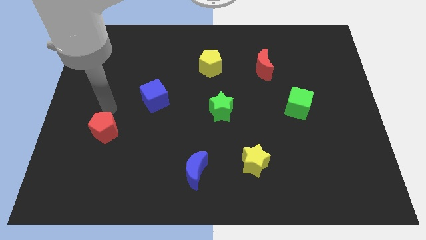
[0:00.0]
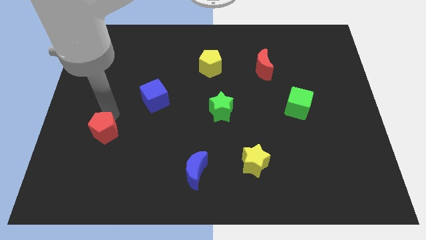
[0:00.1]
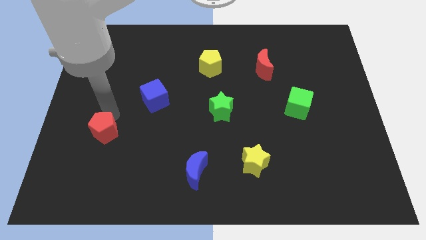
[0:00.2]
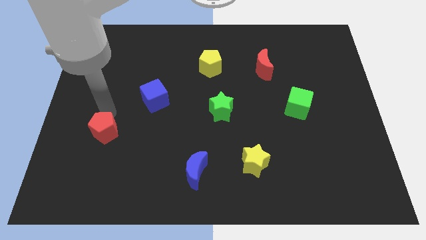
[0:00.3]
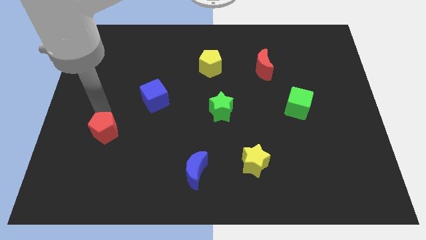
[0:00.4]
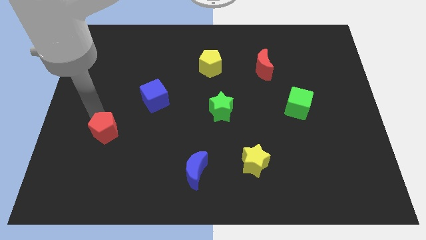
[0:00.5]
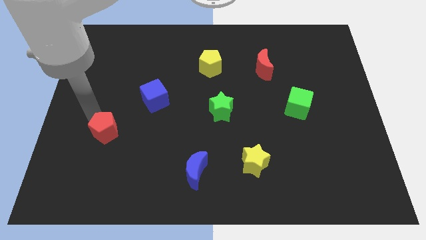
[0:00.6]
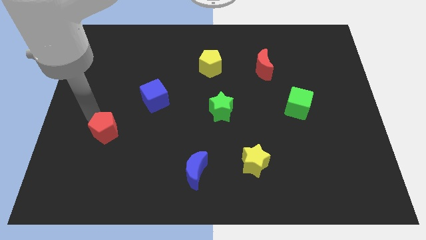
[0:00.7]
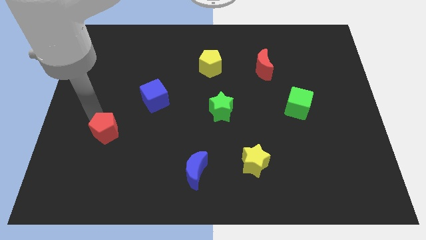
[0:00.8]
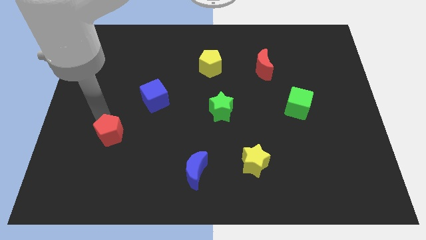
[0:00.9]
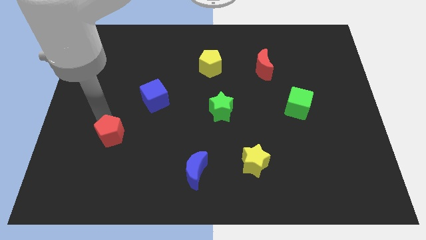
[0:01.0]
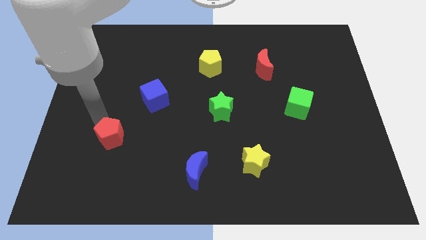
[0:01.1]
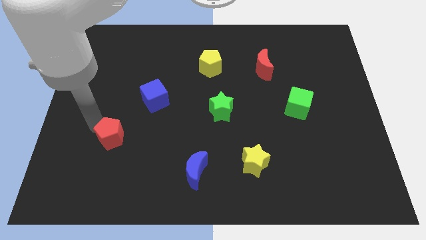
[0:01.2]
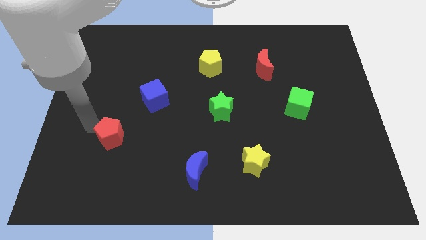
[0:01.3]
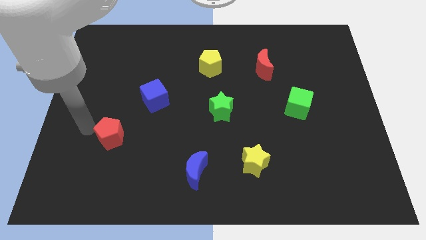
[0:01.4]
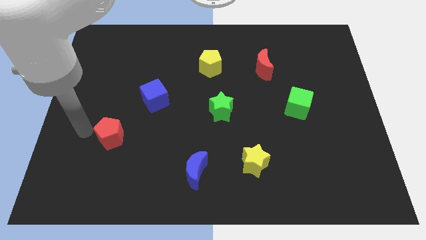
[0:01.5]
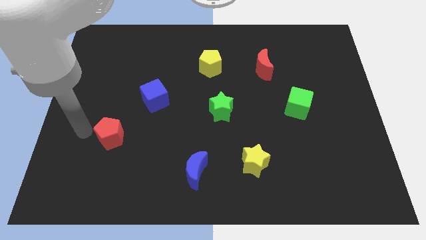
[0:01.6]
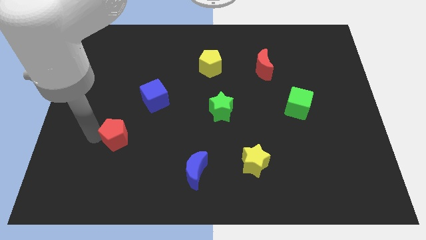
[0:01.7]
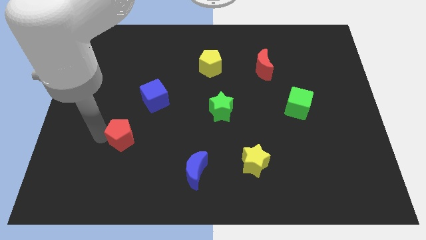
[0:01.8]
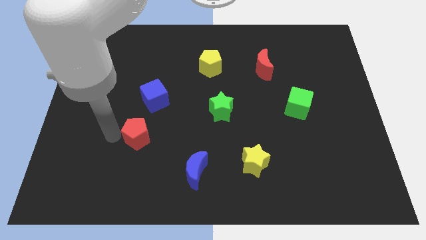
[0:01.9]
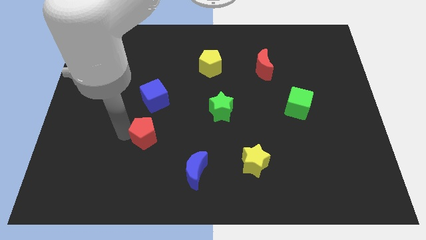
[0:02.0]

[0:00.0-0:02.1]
place red pentagon below the blue cube

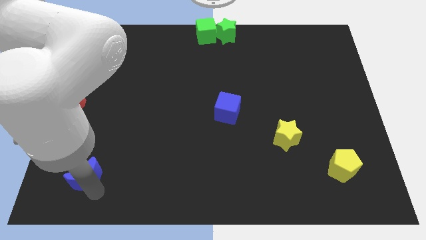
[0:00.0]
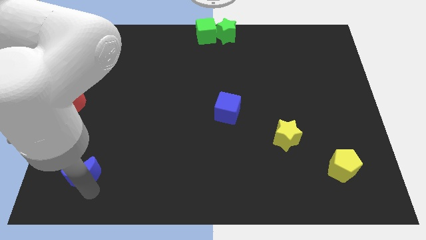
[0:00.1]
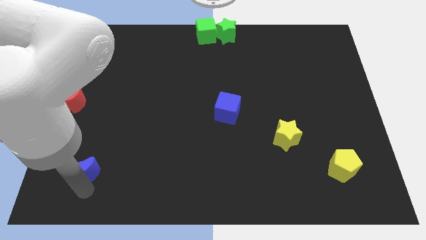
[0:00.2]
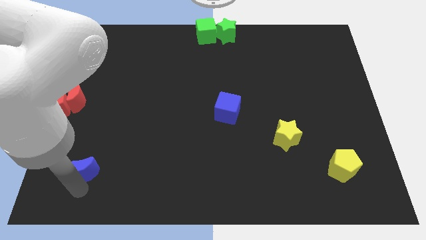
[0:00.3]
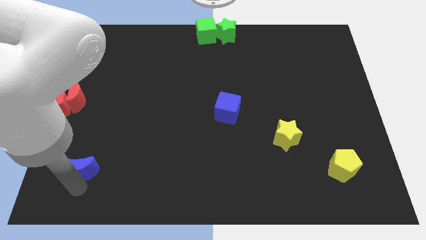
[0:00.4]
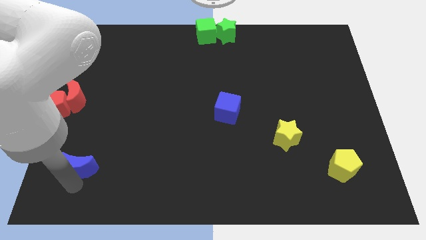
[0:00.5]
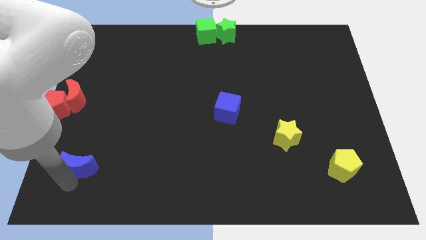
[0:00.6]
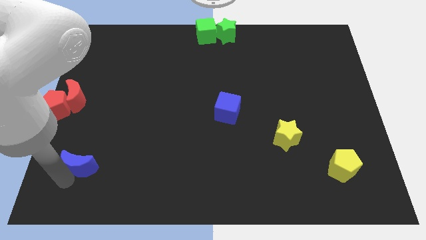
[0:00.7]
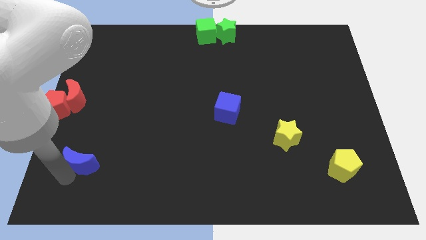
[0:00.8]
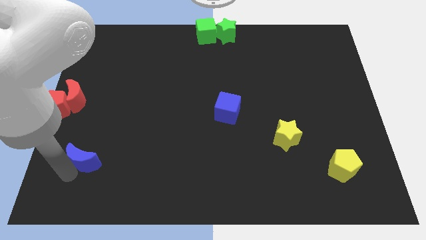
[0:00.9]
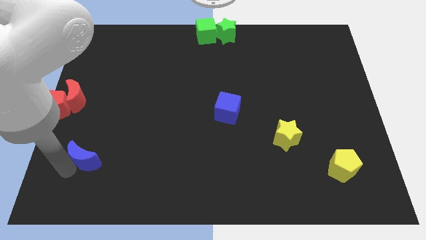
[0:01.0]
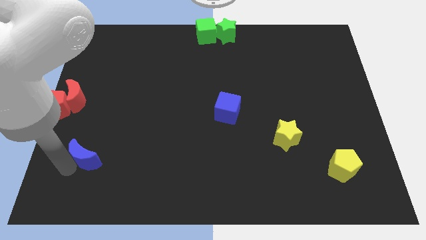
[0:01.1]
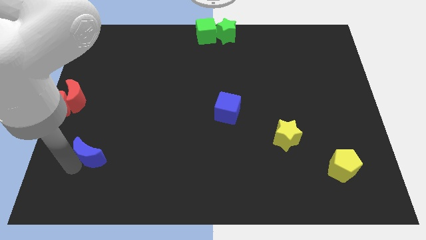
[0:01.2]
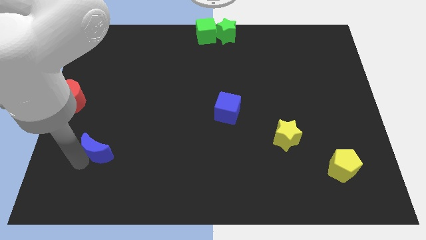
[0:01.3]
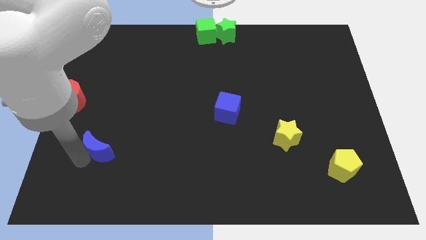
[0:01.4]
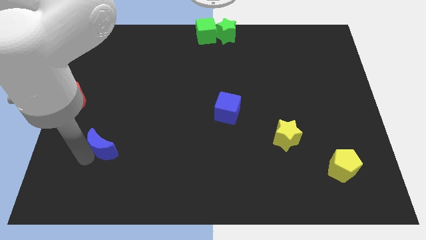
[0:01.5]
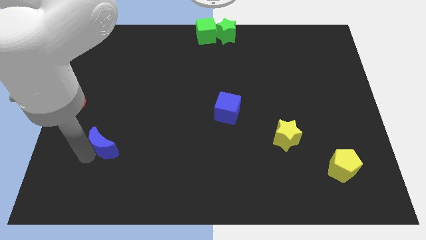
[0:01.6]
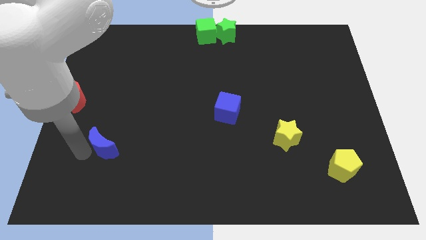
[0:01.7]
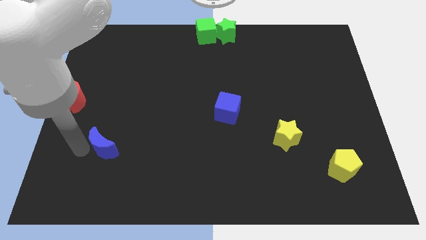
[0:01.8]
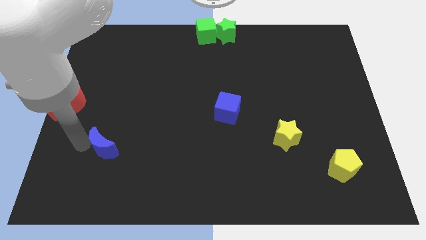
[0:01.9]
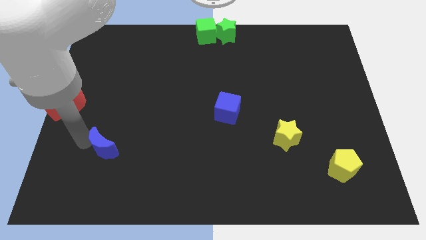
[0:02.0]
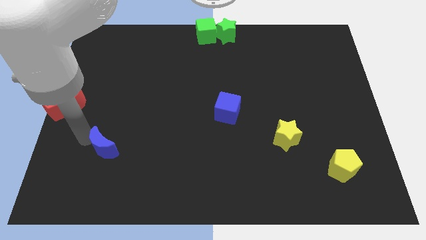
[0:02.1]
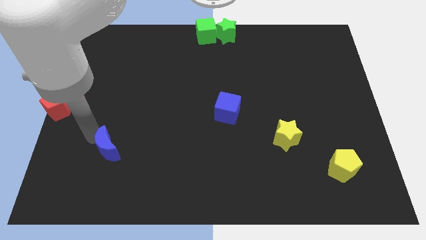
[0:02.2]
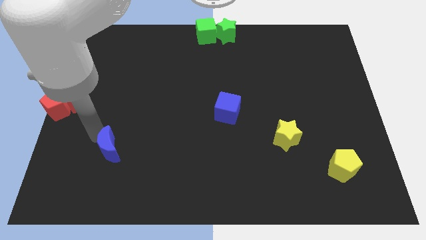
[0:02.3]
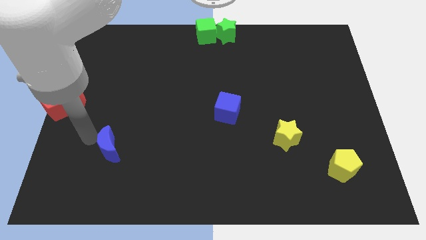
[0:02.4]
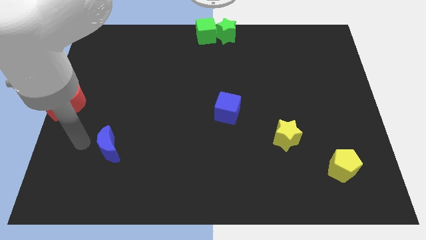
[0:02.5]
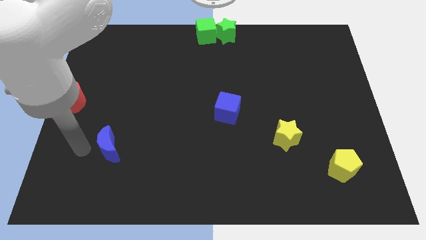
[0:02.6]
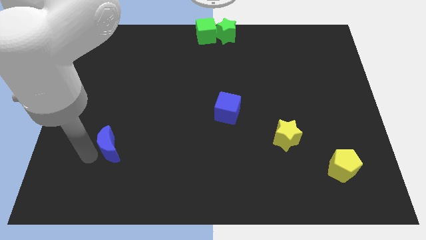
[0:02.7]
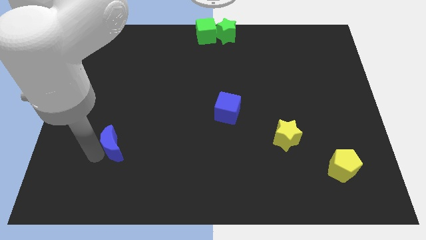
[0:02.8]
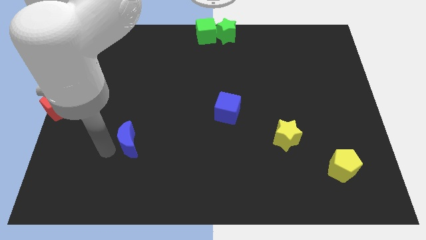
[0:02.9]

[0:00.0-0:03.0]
push the blue crescent slightly towards the center of the board

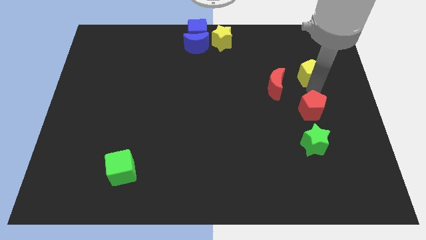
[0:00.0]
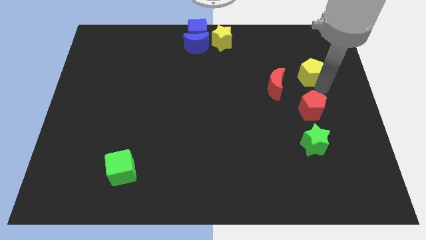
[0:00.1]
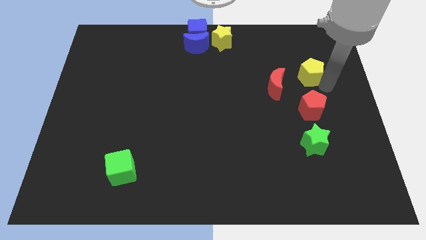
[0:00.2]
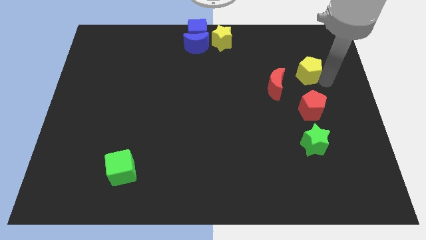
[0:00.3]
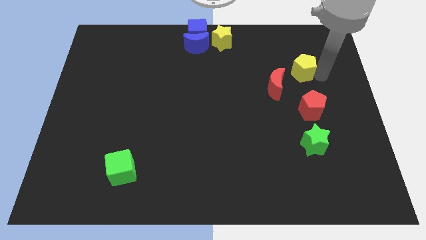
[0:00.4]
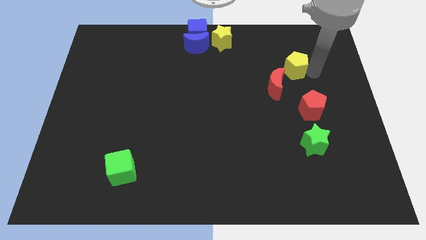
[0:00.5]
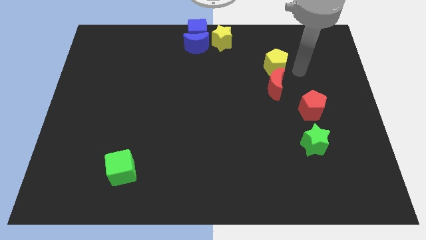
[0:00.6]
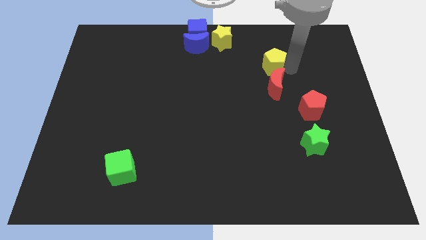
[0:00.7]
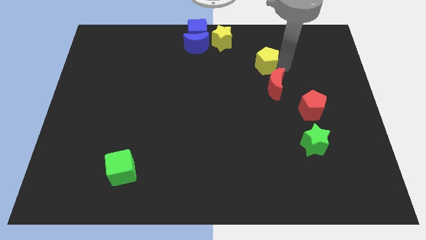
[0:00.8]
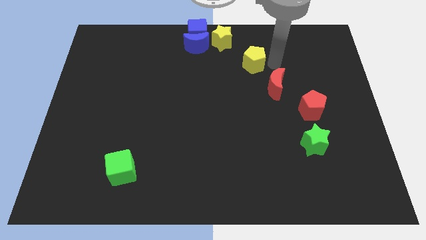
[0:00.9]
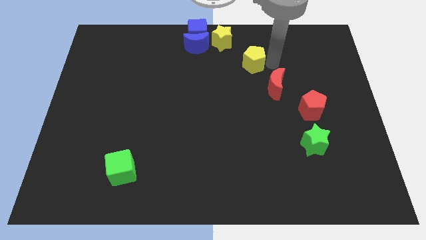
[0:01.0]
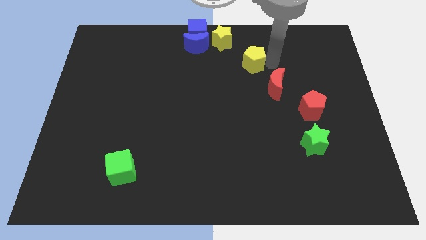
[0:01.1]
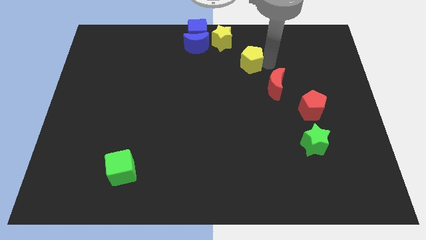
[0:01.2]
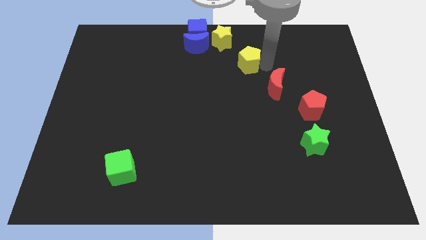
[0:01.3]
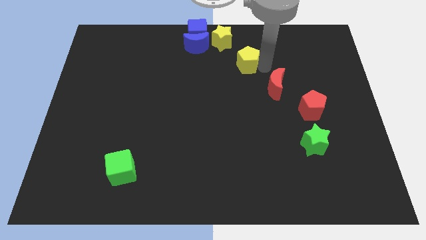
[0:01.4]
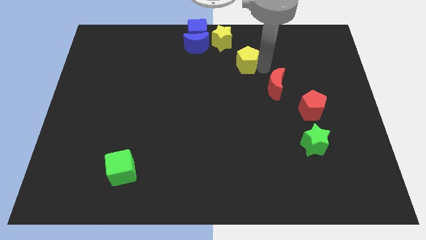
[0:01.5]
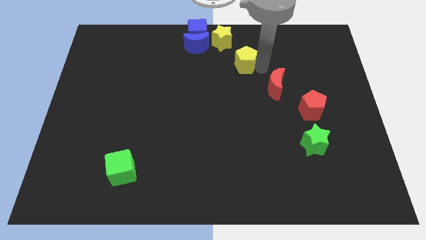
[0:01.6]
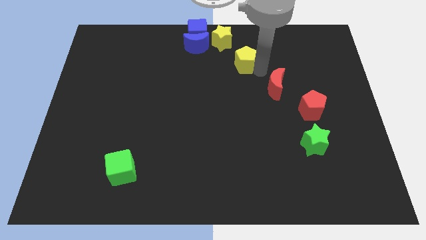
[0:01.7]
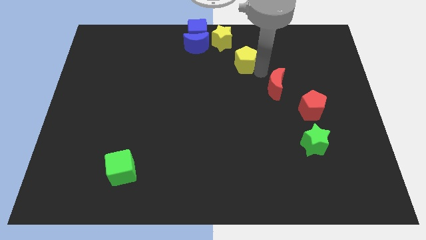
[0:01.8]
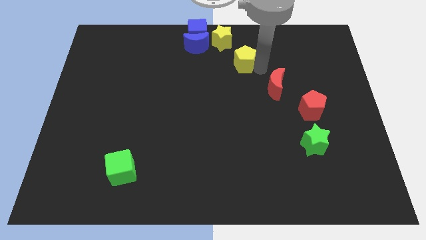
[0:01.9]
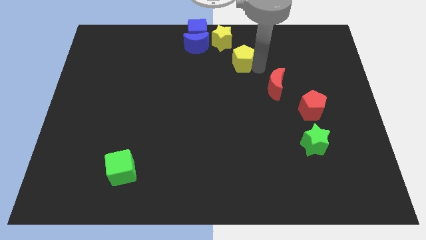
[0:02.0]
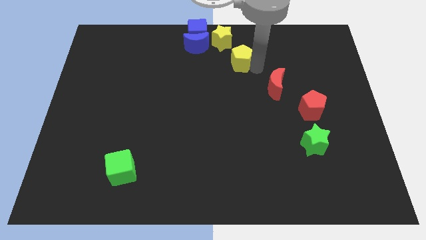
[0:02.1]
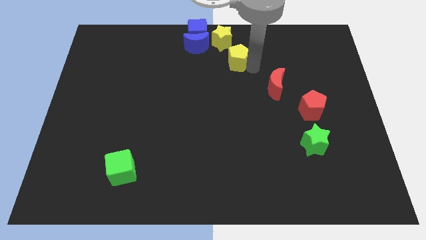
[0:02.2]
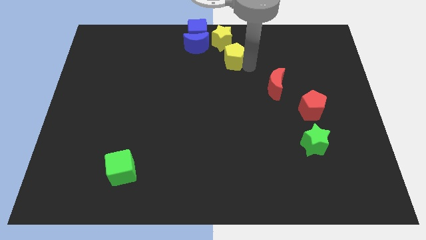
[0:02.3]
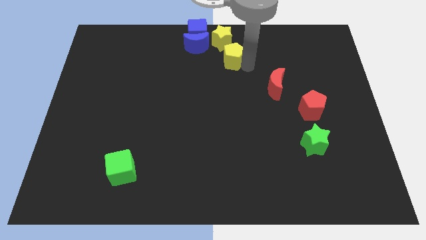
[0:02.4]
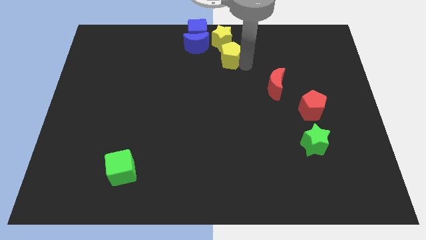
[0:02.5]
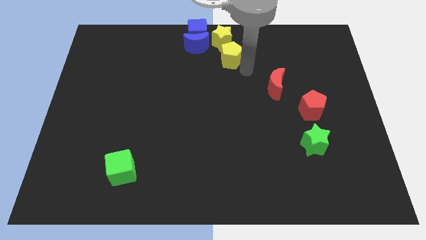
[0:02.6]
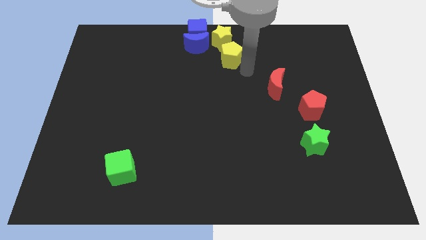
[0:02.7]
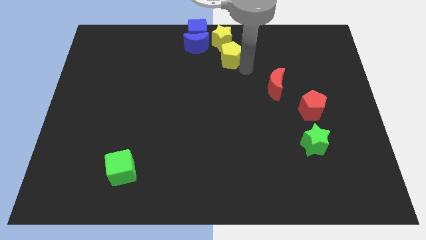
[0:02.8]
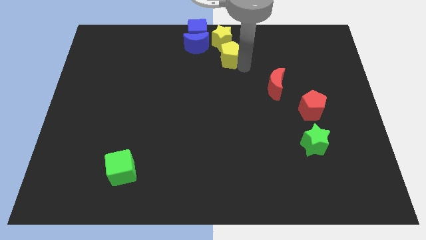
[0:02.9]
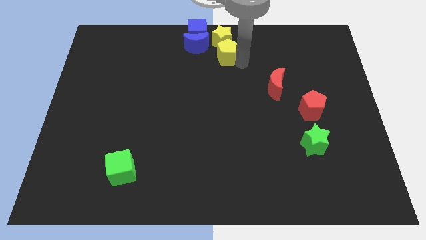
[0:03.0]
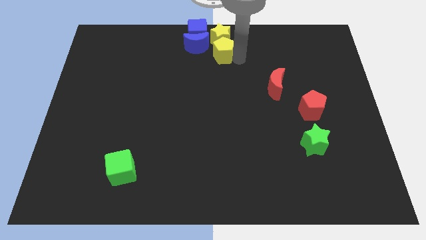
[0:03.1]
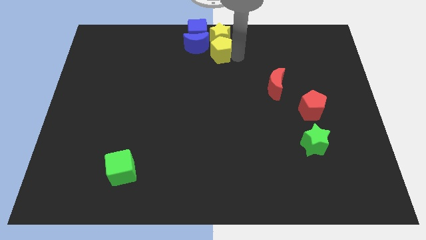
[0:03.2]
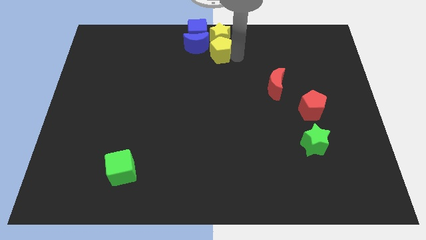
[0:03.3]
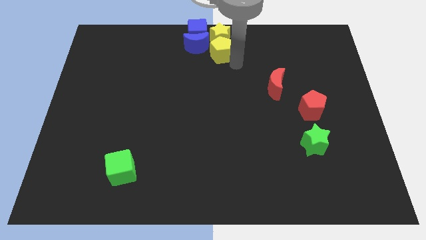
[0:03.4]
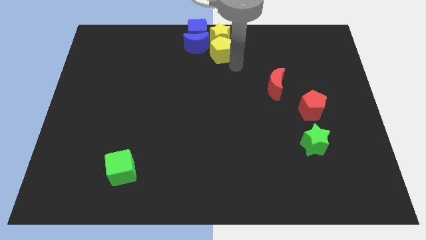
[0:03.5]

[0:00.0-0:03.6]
move the yellow pentagon into the bottom side of the yellow star

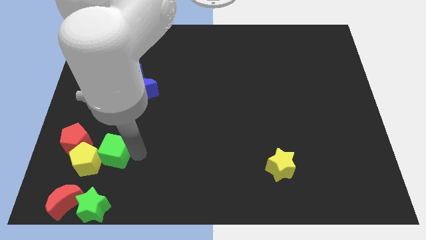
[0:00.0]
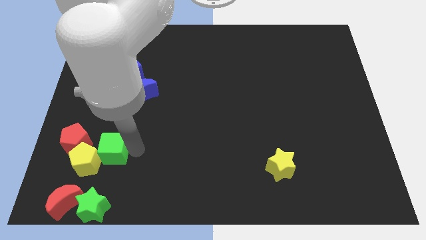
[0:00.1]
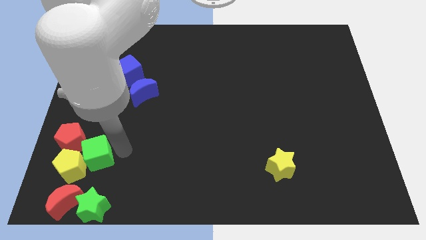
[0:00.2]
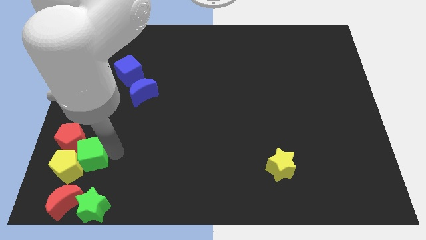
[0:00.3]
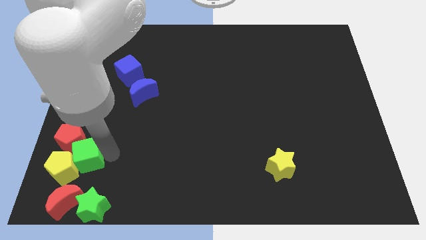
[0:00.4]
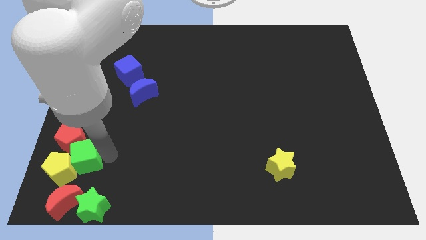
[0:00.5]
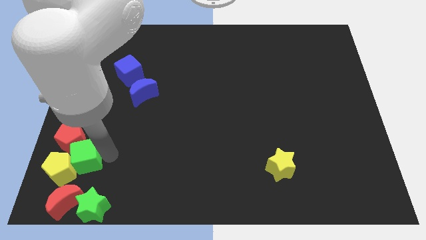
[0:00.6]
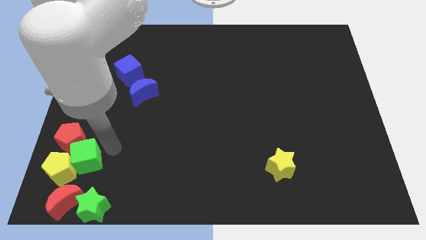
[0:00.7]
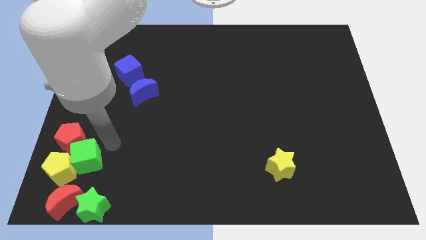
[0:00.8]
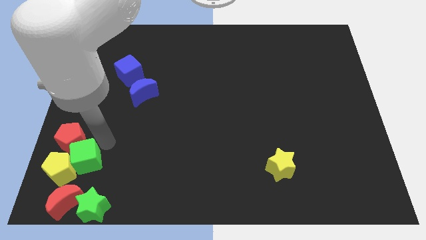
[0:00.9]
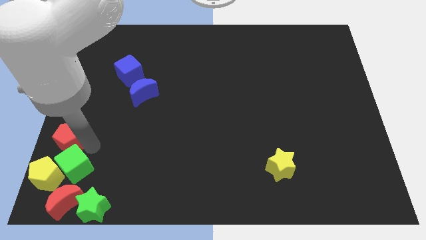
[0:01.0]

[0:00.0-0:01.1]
push green cube in to yellow pentagon
